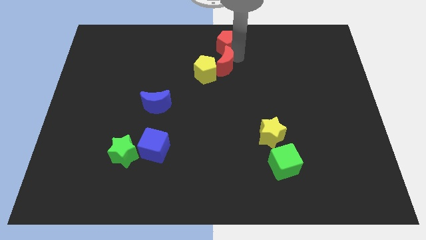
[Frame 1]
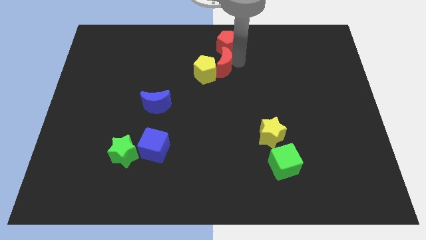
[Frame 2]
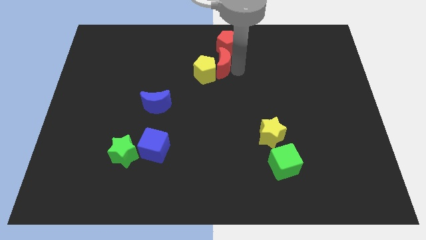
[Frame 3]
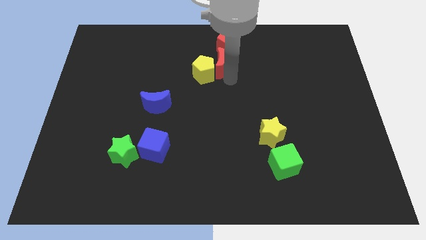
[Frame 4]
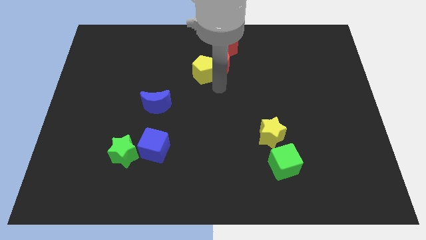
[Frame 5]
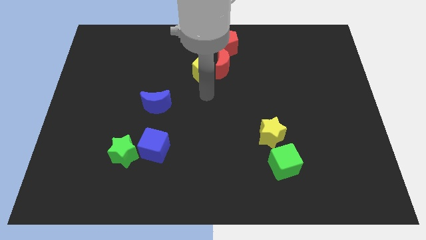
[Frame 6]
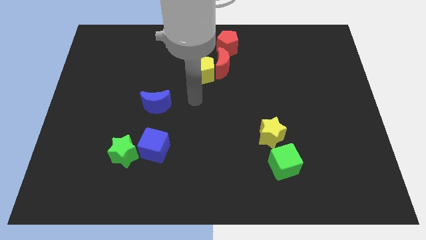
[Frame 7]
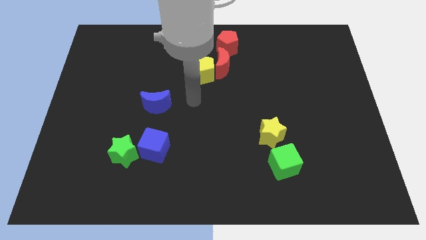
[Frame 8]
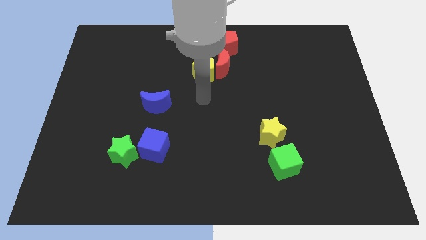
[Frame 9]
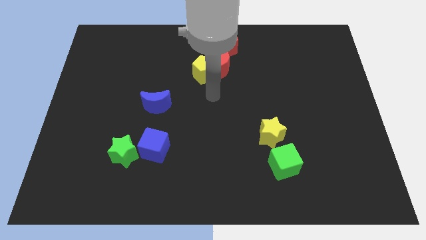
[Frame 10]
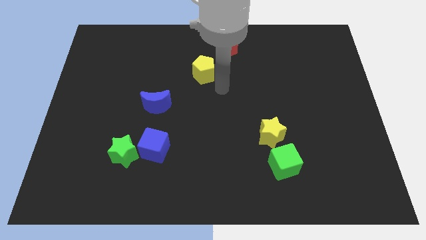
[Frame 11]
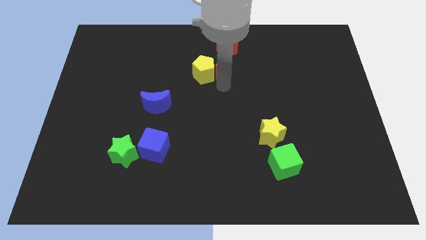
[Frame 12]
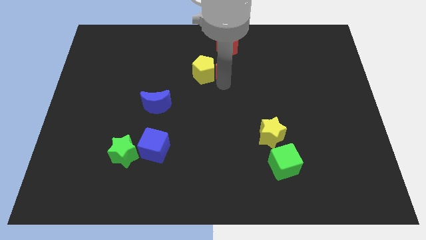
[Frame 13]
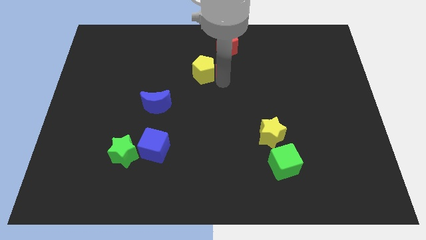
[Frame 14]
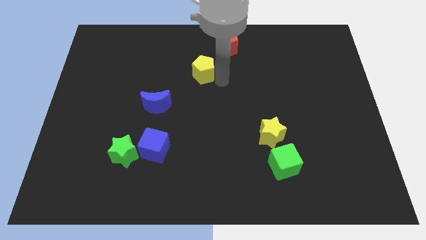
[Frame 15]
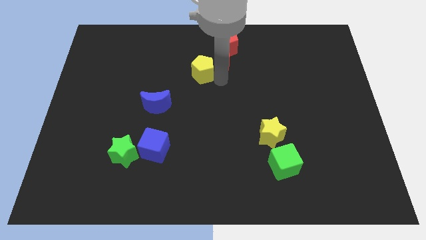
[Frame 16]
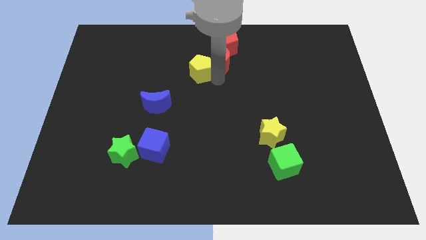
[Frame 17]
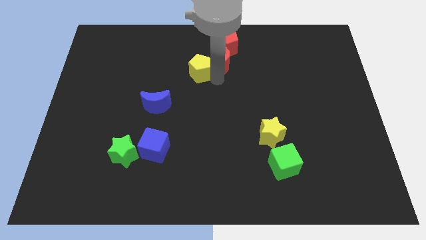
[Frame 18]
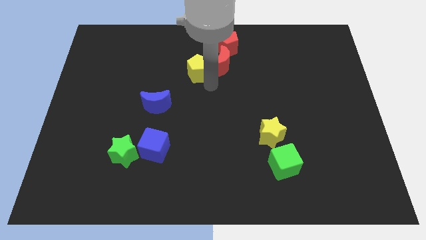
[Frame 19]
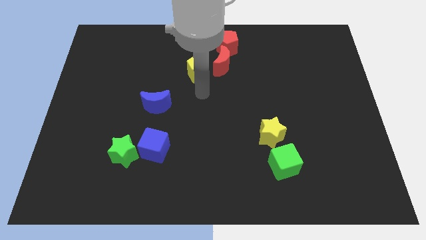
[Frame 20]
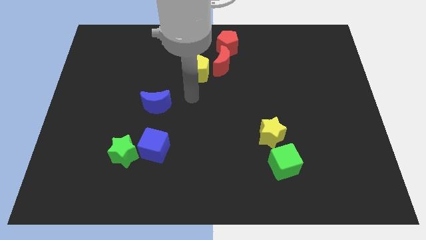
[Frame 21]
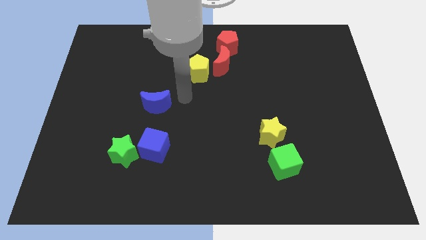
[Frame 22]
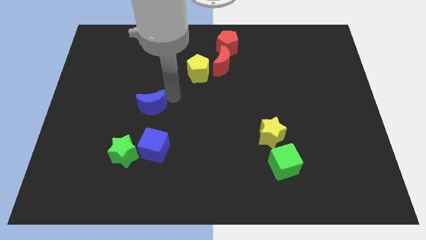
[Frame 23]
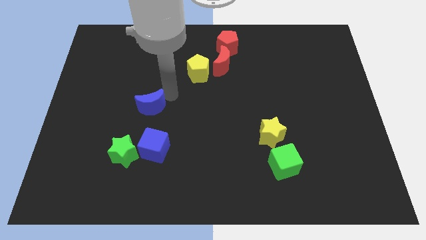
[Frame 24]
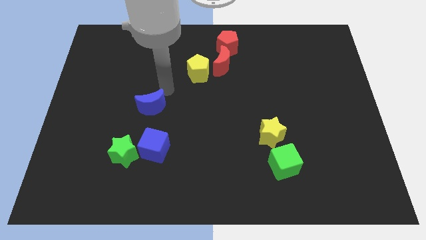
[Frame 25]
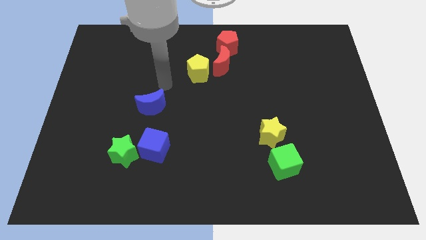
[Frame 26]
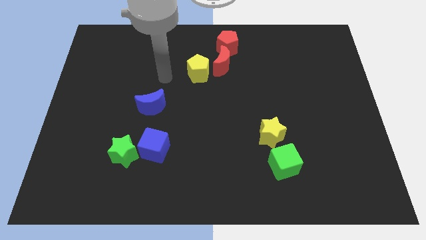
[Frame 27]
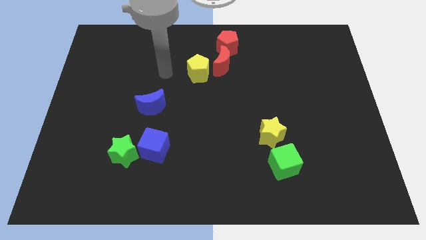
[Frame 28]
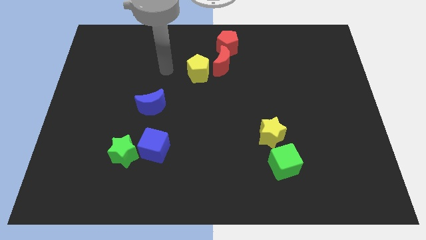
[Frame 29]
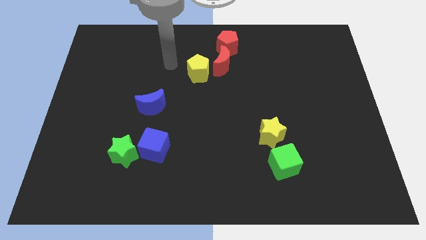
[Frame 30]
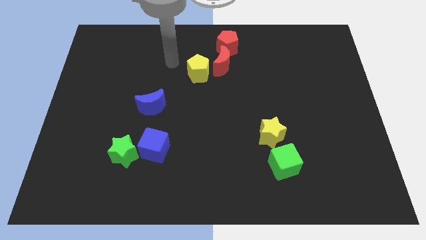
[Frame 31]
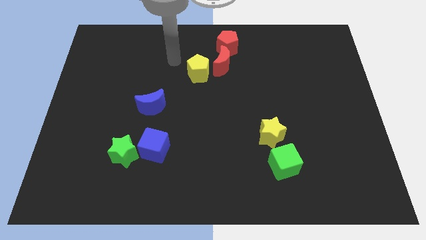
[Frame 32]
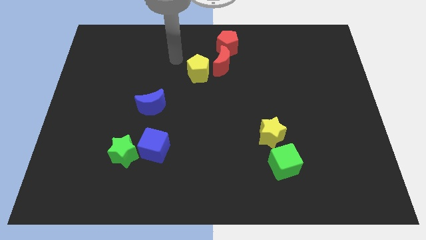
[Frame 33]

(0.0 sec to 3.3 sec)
move the red crescent to the top right side of the yellow pentagon

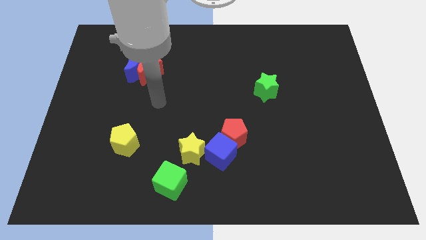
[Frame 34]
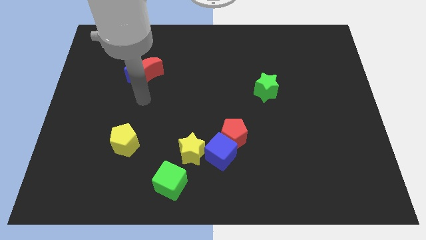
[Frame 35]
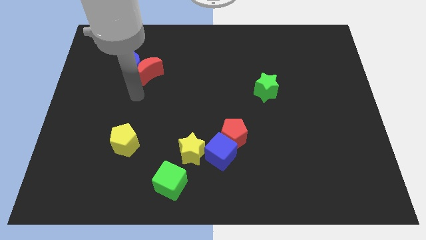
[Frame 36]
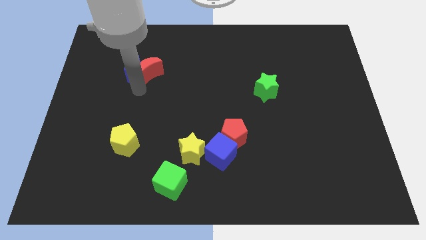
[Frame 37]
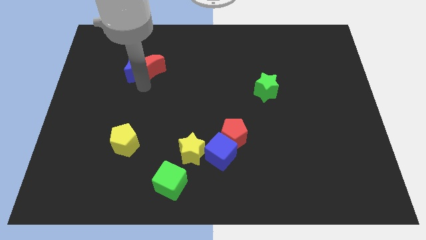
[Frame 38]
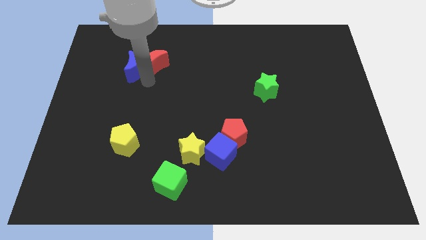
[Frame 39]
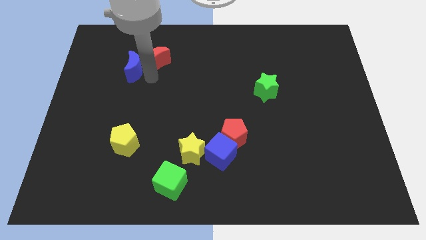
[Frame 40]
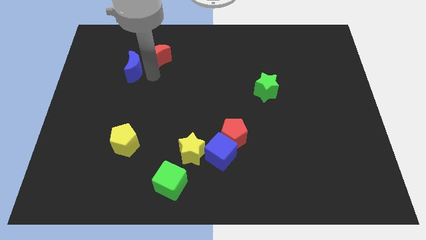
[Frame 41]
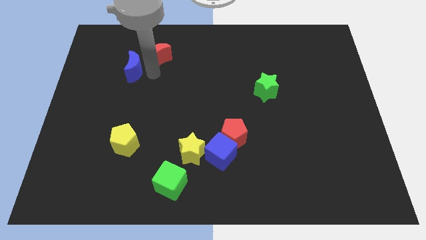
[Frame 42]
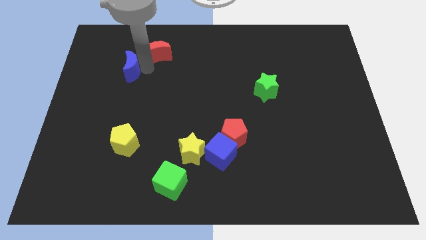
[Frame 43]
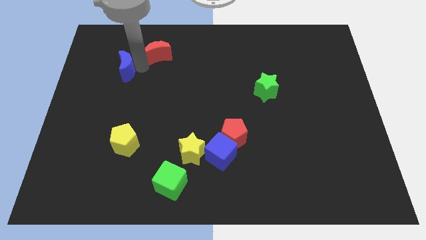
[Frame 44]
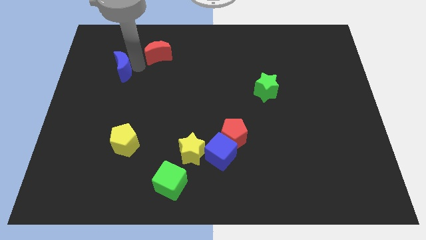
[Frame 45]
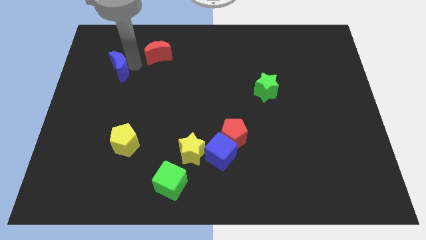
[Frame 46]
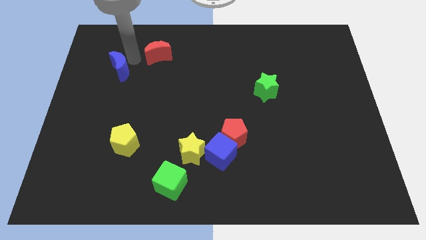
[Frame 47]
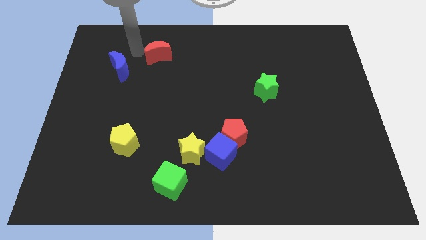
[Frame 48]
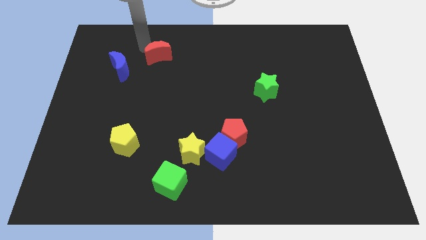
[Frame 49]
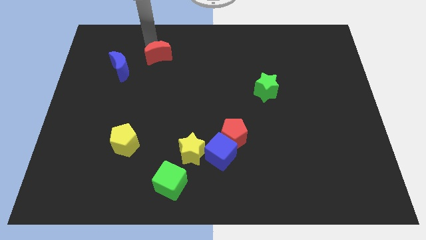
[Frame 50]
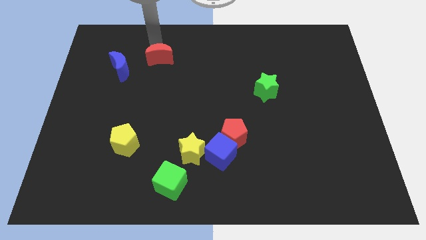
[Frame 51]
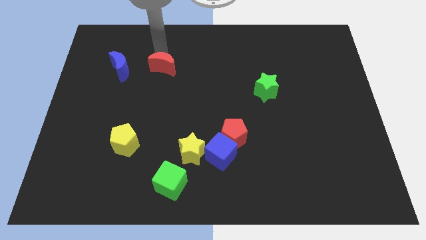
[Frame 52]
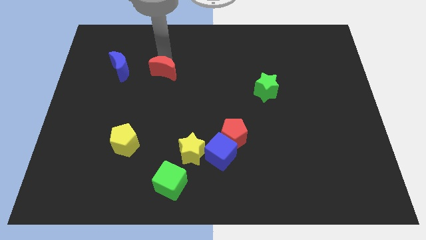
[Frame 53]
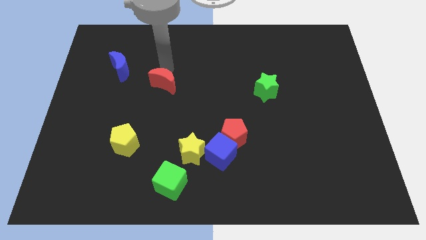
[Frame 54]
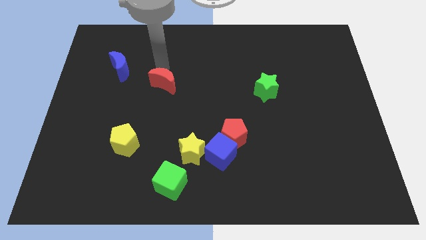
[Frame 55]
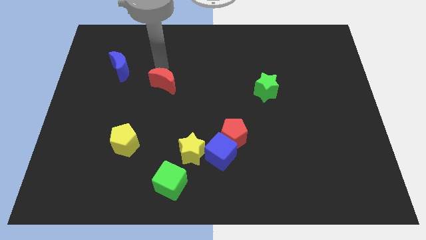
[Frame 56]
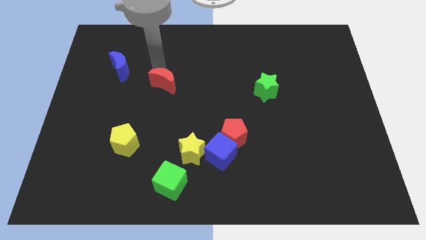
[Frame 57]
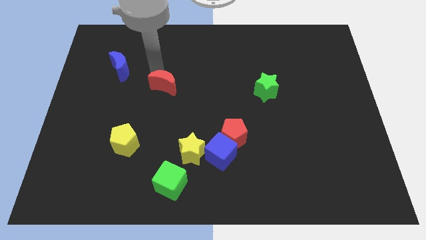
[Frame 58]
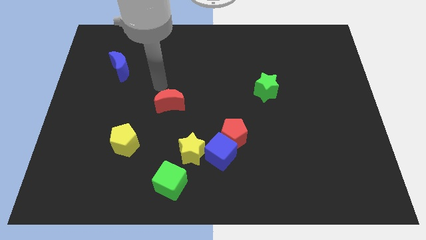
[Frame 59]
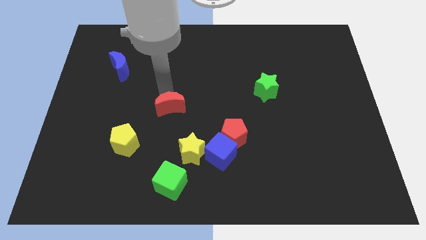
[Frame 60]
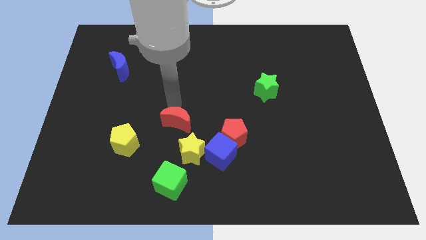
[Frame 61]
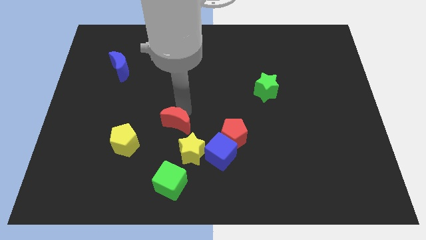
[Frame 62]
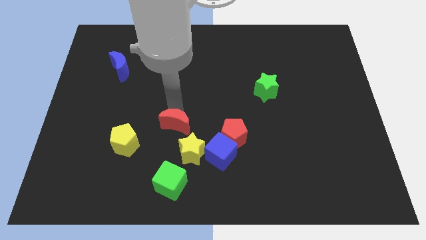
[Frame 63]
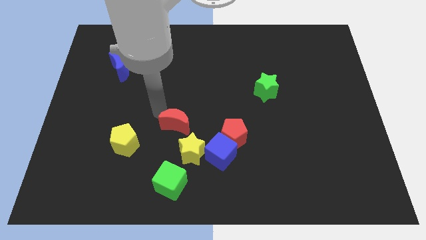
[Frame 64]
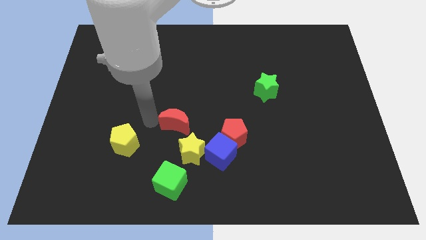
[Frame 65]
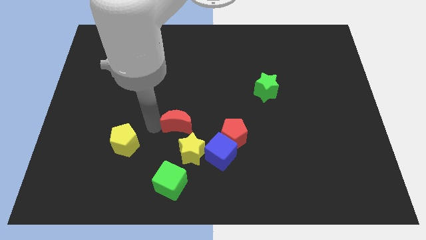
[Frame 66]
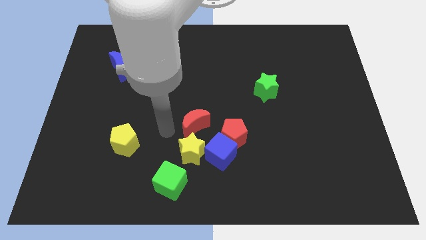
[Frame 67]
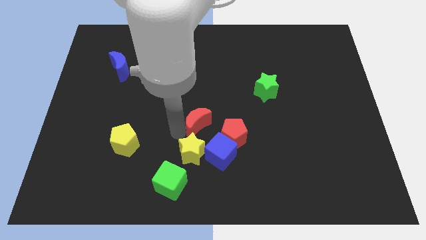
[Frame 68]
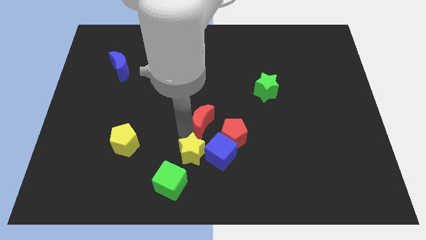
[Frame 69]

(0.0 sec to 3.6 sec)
place the red crescent above the yellow star

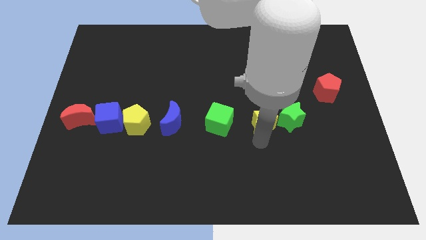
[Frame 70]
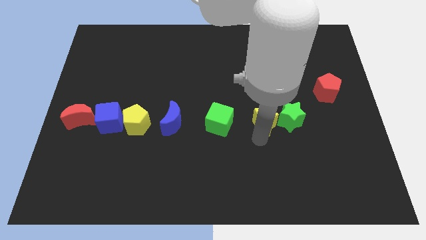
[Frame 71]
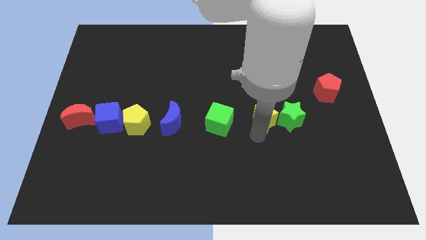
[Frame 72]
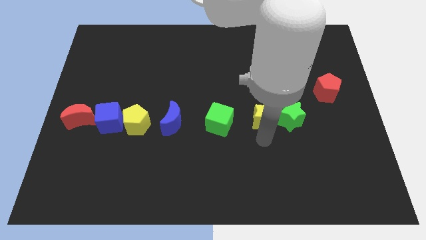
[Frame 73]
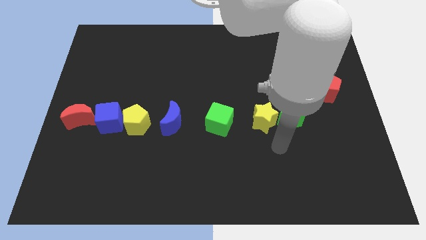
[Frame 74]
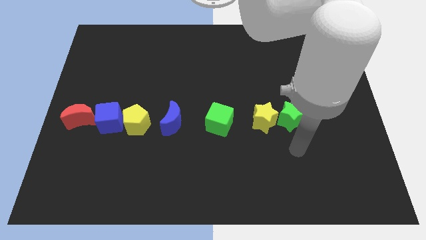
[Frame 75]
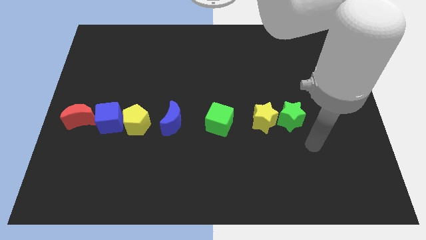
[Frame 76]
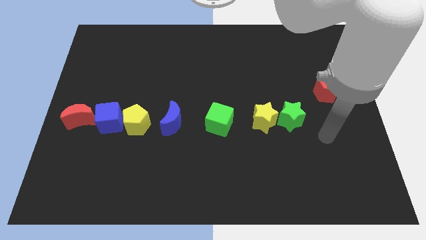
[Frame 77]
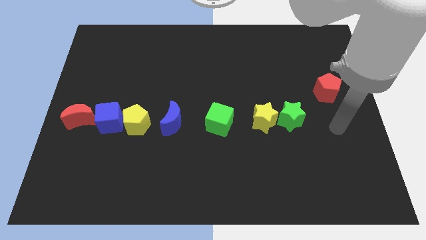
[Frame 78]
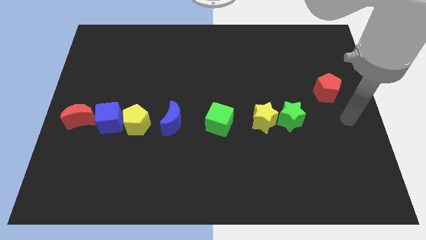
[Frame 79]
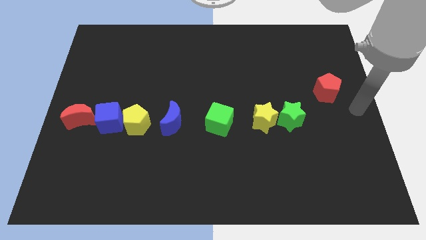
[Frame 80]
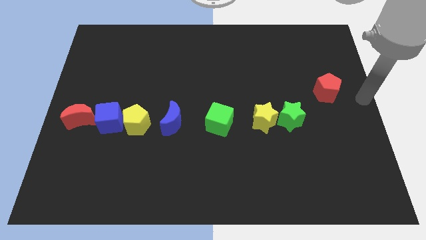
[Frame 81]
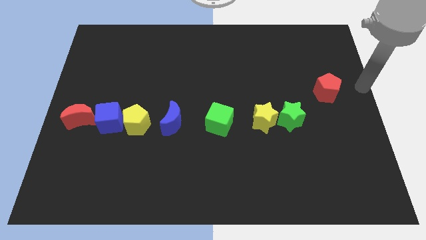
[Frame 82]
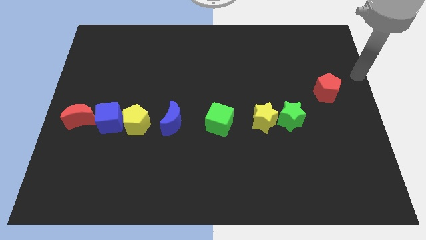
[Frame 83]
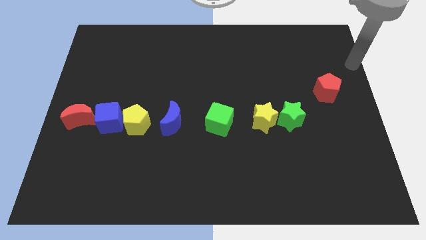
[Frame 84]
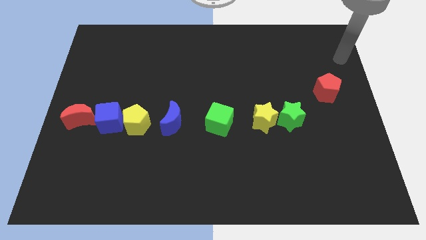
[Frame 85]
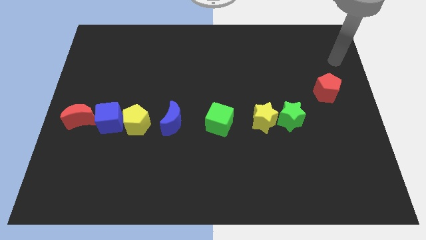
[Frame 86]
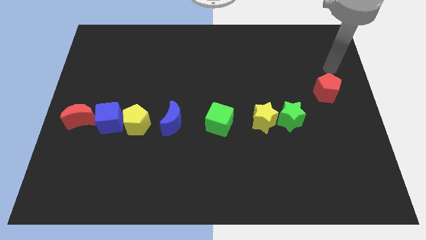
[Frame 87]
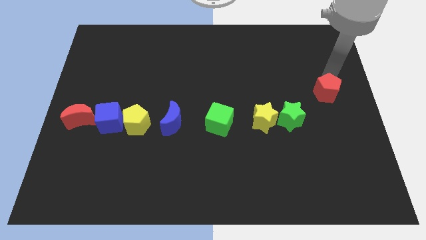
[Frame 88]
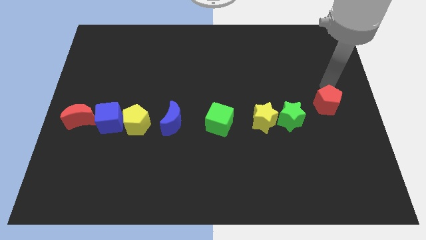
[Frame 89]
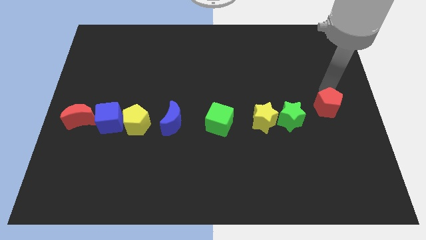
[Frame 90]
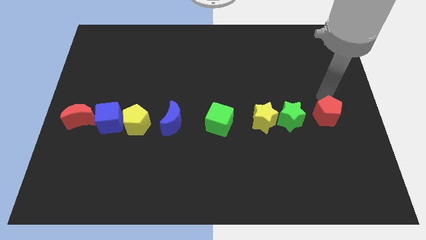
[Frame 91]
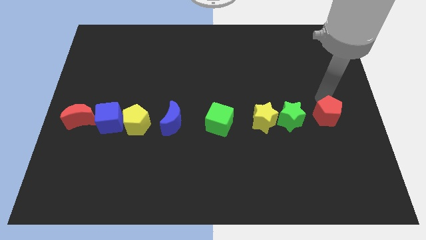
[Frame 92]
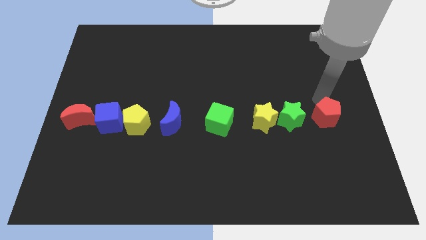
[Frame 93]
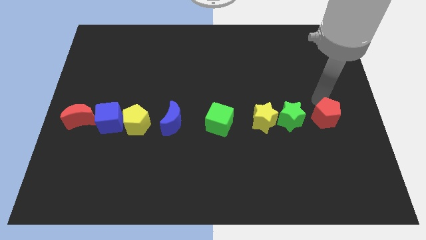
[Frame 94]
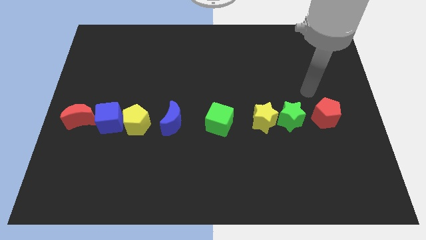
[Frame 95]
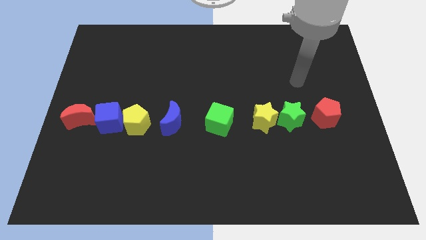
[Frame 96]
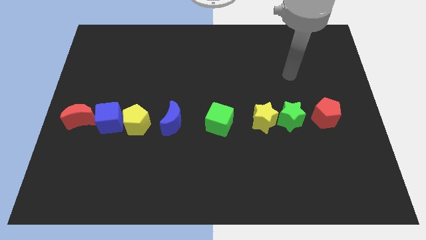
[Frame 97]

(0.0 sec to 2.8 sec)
place all the blocks into the same to form a horizontal line
